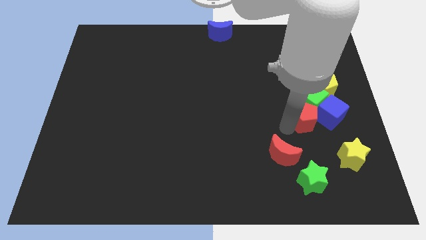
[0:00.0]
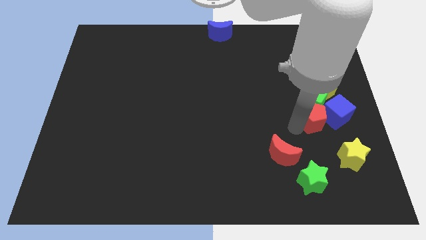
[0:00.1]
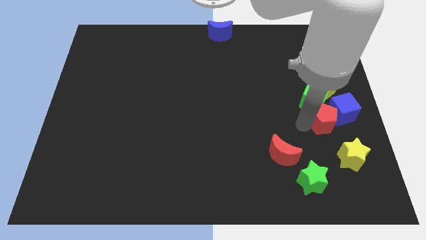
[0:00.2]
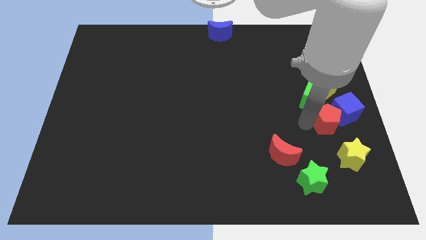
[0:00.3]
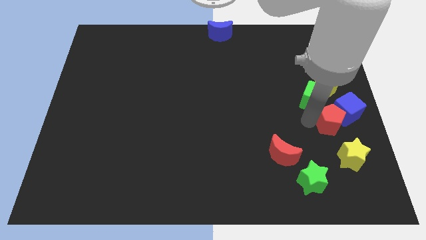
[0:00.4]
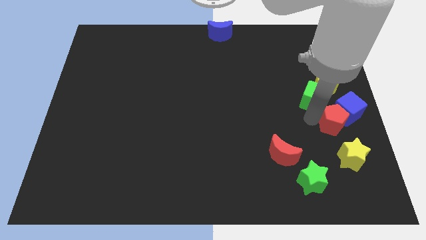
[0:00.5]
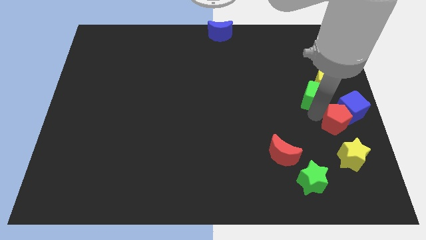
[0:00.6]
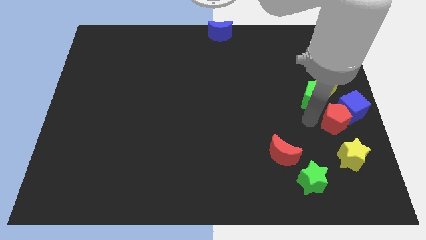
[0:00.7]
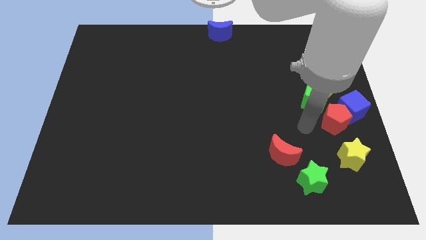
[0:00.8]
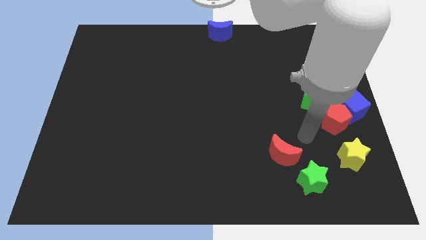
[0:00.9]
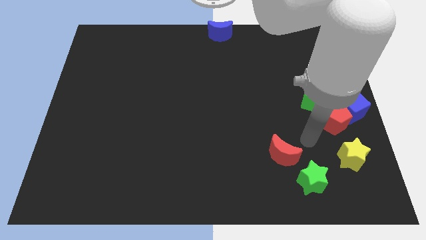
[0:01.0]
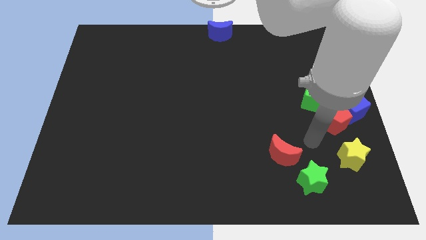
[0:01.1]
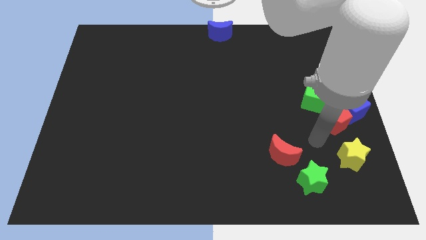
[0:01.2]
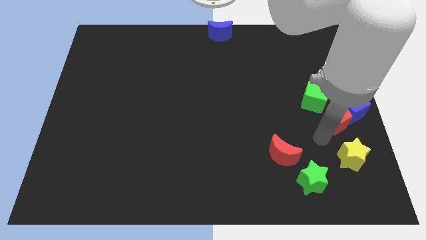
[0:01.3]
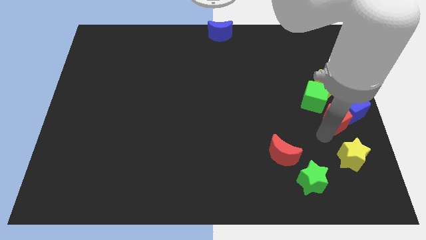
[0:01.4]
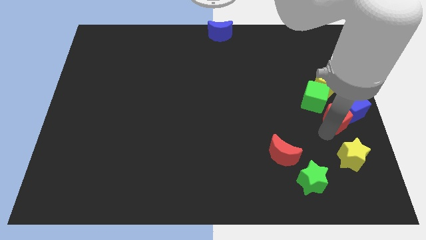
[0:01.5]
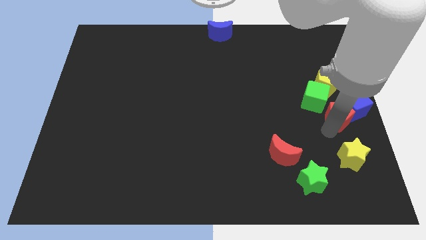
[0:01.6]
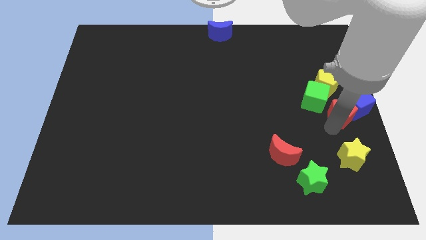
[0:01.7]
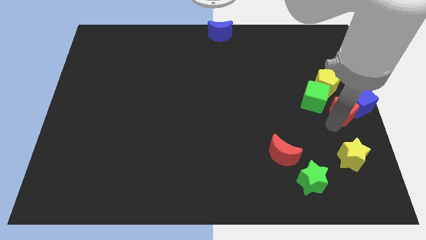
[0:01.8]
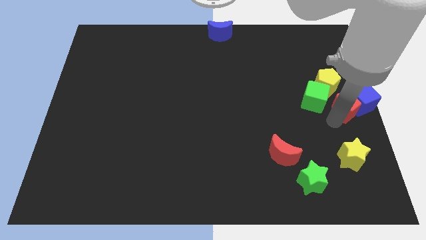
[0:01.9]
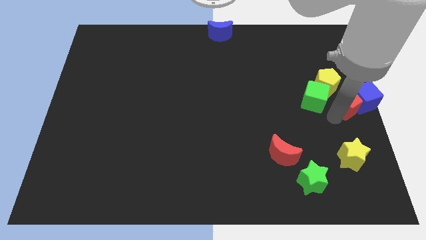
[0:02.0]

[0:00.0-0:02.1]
push red pentagon towards blue cube

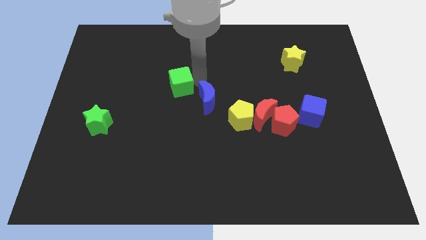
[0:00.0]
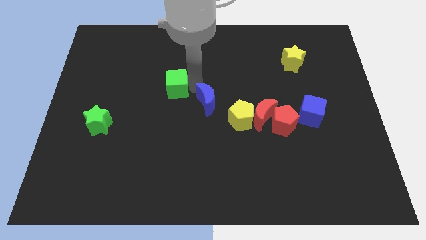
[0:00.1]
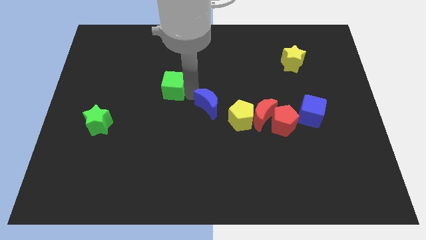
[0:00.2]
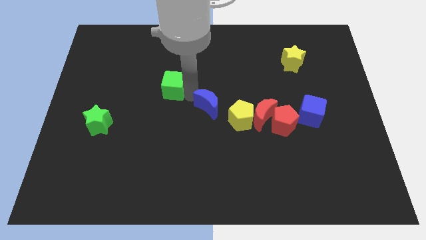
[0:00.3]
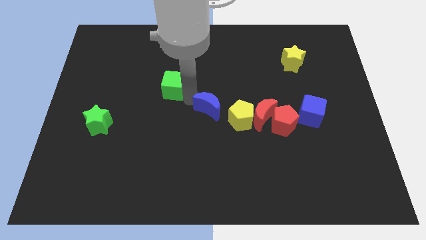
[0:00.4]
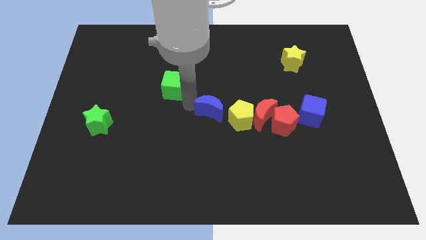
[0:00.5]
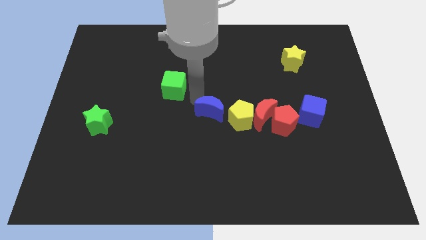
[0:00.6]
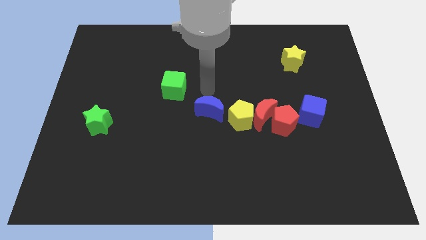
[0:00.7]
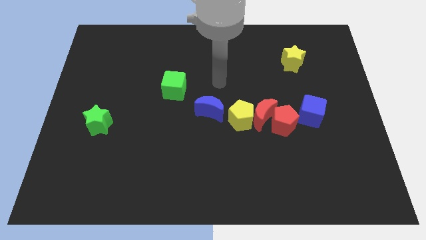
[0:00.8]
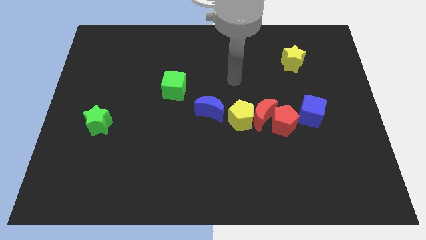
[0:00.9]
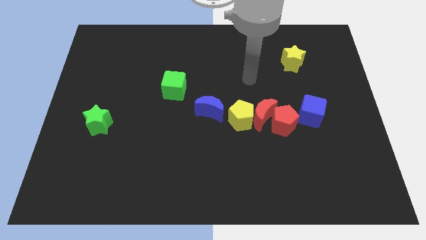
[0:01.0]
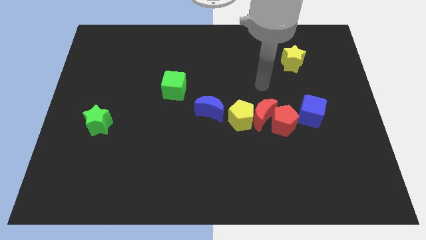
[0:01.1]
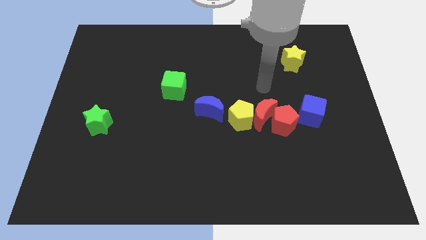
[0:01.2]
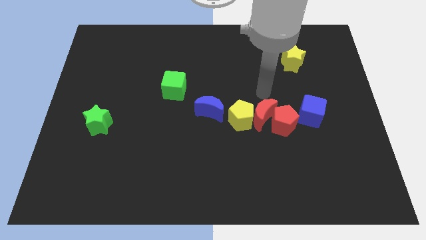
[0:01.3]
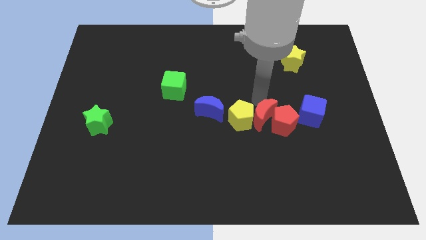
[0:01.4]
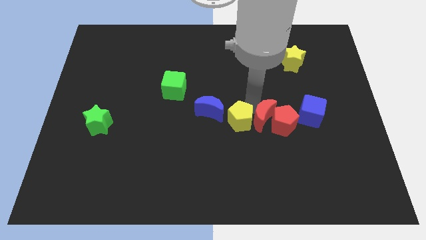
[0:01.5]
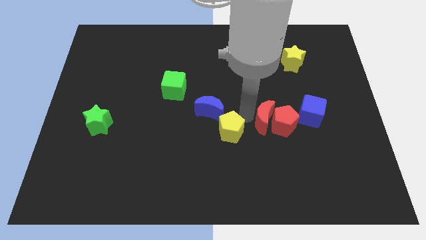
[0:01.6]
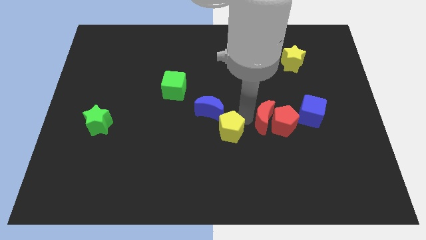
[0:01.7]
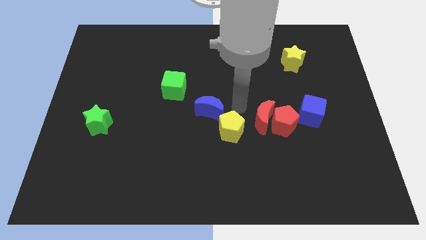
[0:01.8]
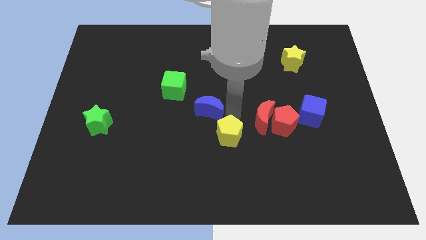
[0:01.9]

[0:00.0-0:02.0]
move the yellow pentagon downwards

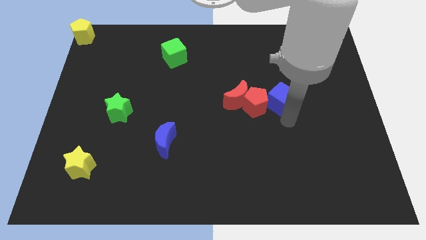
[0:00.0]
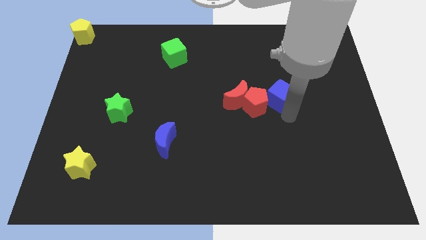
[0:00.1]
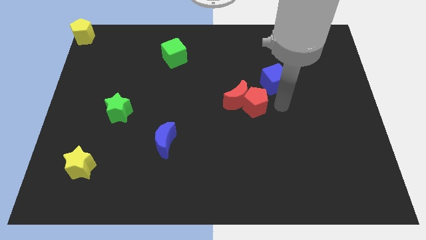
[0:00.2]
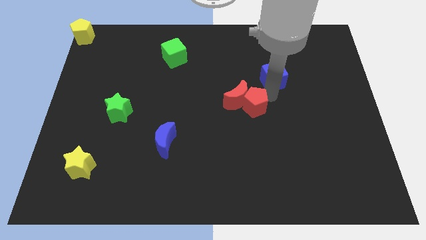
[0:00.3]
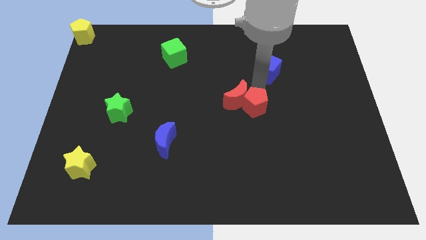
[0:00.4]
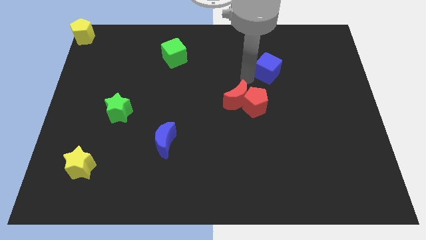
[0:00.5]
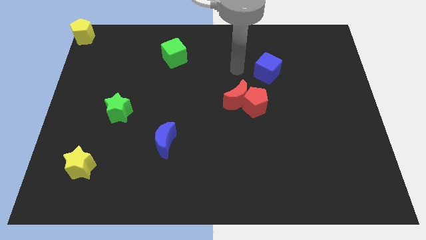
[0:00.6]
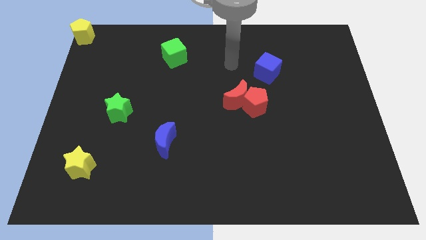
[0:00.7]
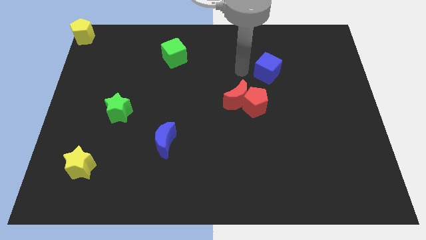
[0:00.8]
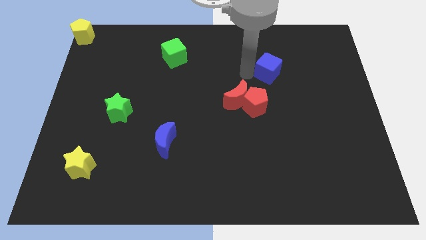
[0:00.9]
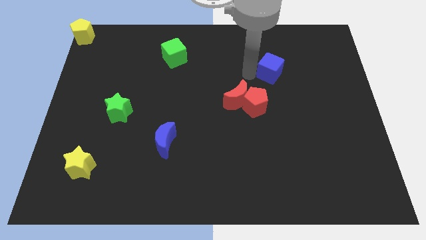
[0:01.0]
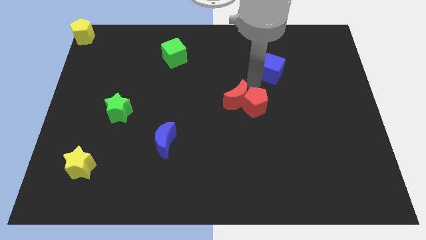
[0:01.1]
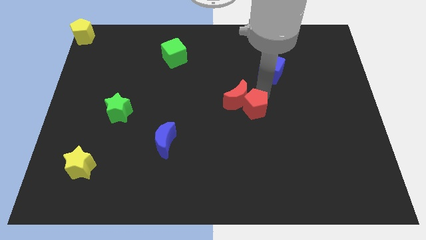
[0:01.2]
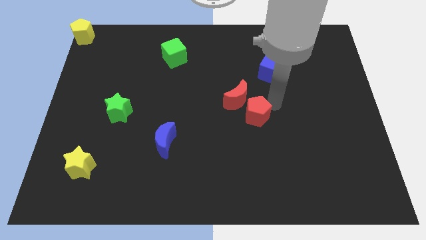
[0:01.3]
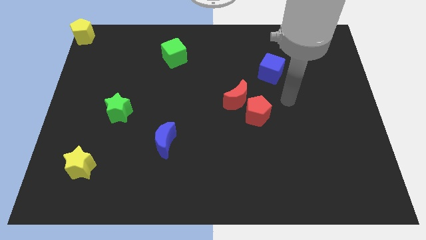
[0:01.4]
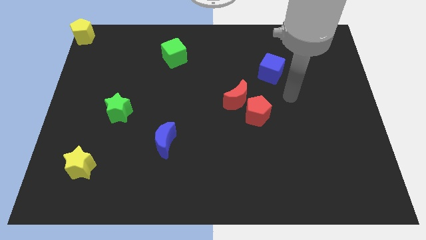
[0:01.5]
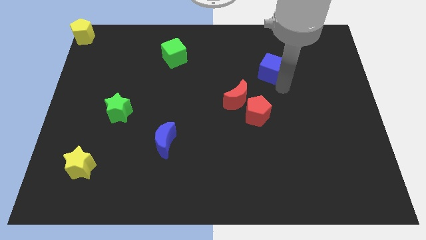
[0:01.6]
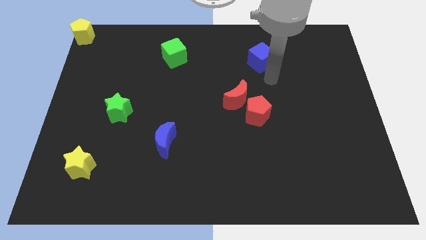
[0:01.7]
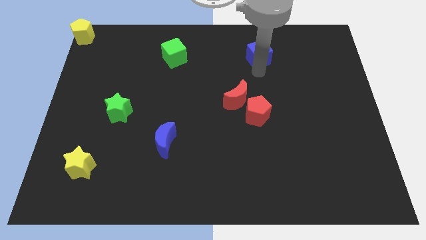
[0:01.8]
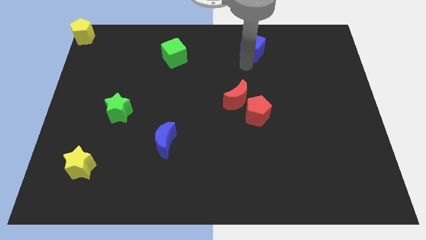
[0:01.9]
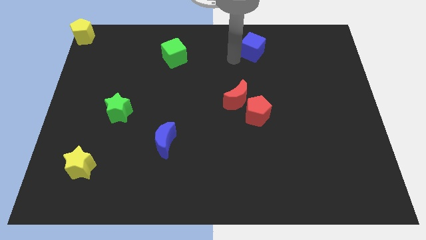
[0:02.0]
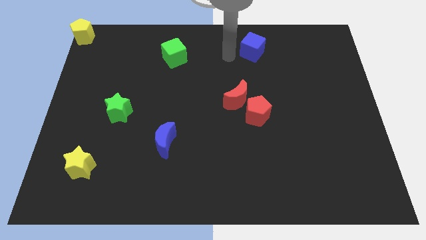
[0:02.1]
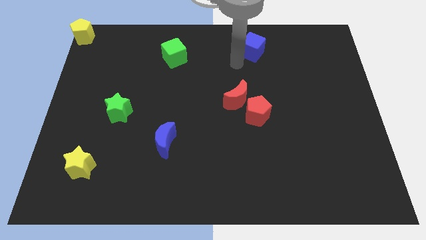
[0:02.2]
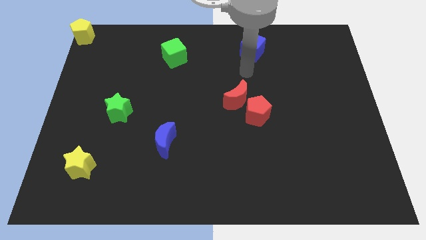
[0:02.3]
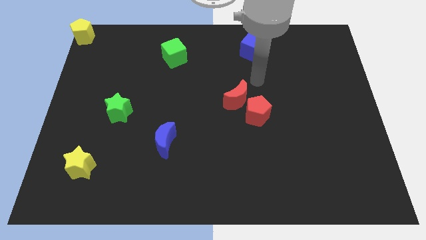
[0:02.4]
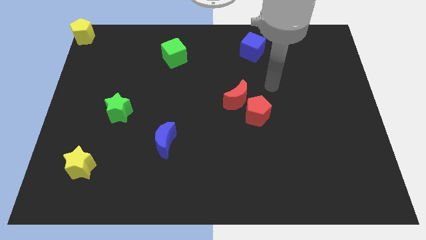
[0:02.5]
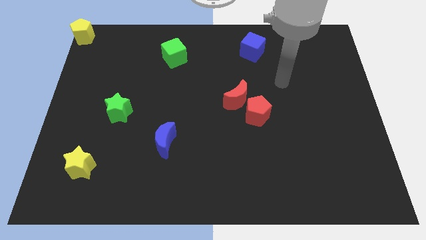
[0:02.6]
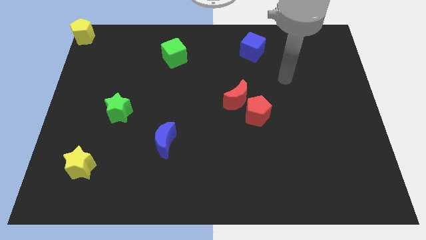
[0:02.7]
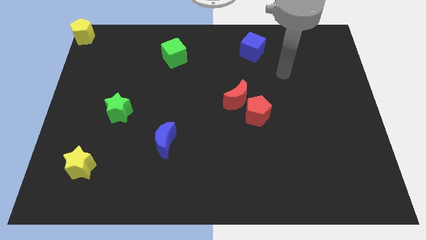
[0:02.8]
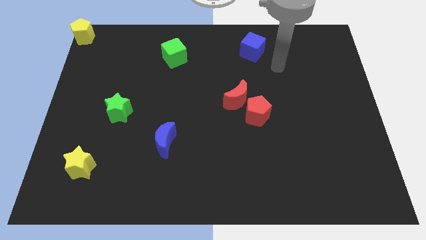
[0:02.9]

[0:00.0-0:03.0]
push blue cube away from the red pentagon

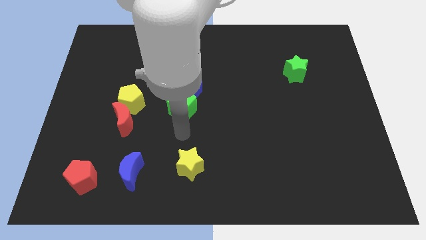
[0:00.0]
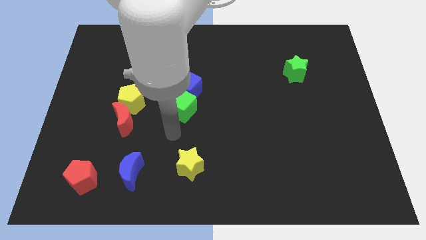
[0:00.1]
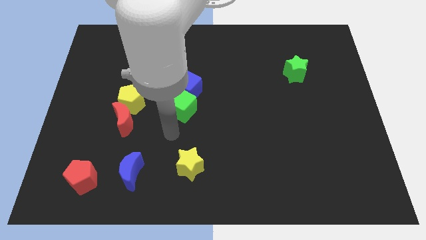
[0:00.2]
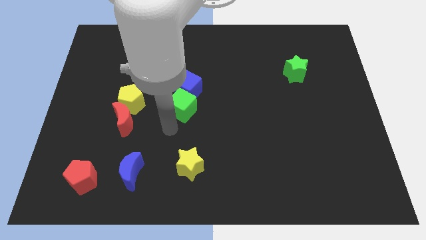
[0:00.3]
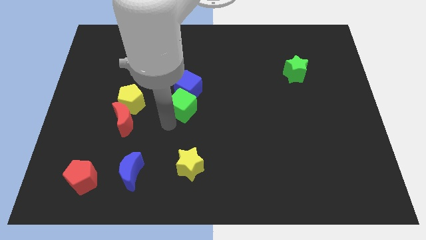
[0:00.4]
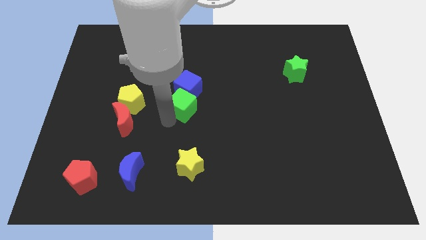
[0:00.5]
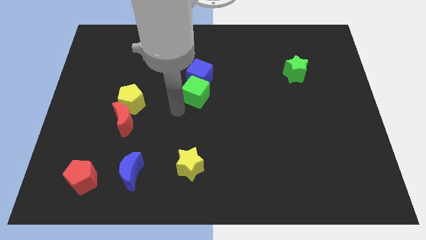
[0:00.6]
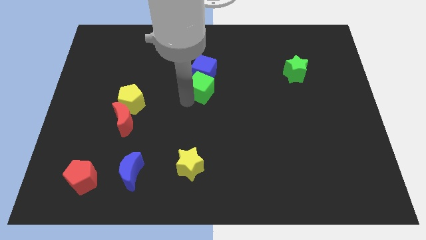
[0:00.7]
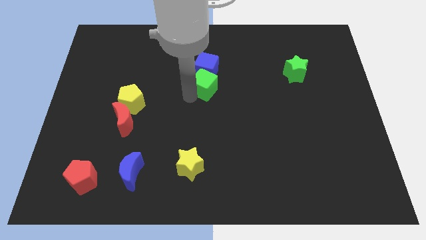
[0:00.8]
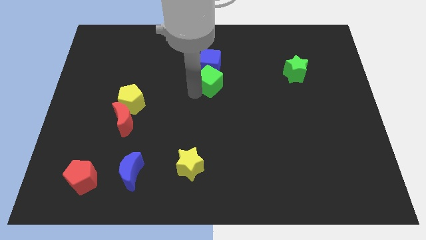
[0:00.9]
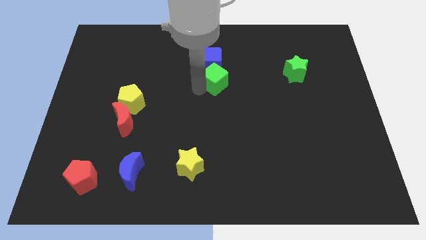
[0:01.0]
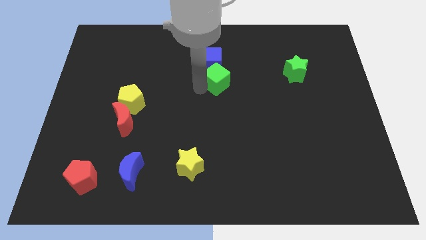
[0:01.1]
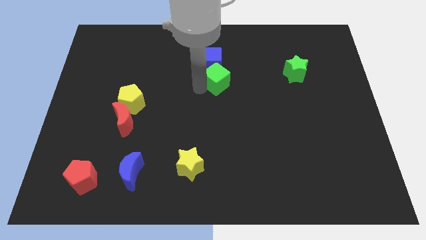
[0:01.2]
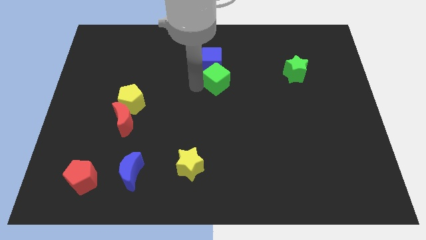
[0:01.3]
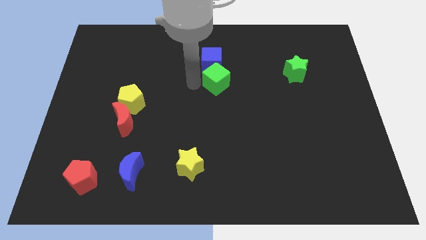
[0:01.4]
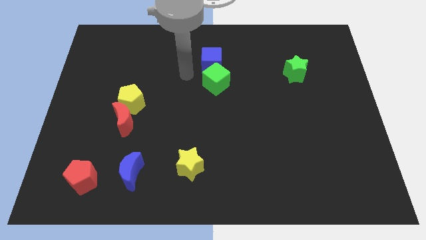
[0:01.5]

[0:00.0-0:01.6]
push the green and blue cubes to the top center

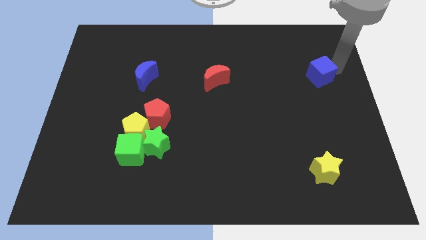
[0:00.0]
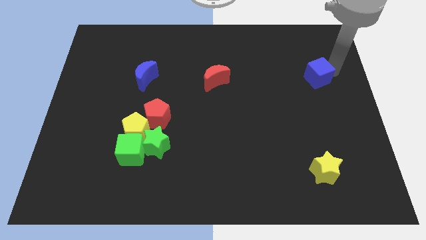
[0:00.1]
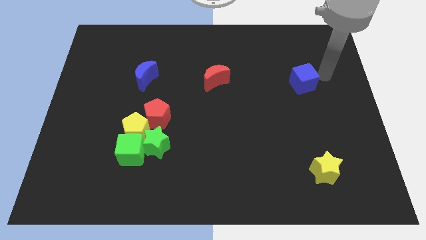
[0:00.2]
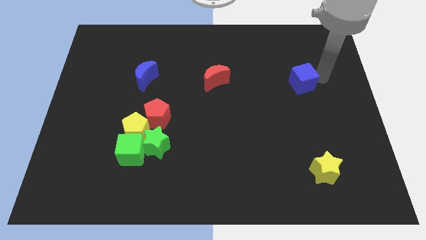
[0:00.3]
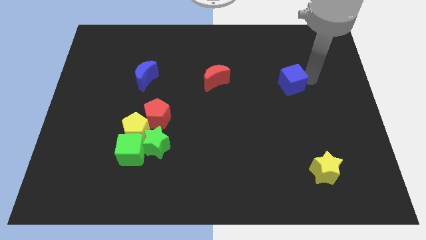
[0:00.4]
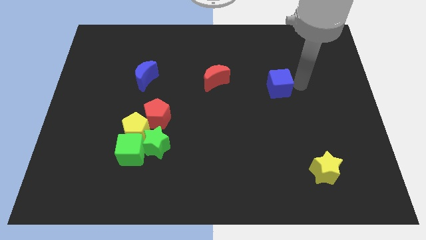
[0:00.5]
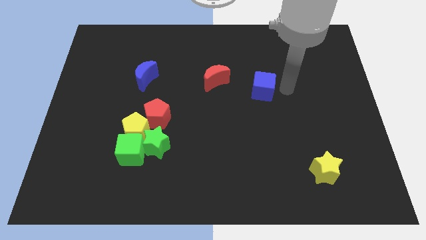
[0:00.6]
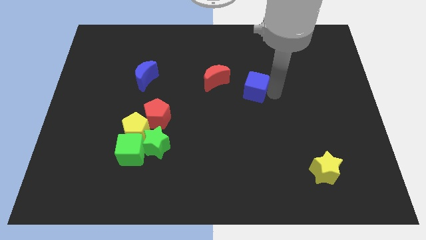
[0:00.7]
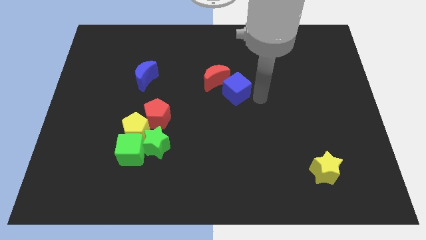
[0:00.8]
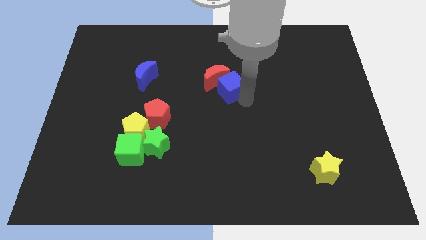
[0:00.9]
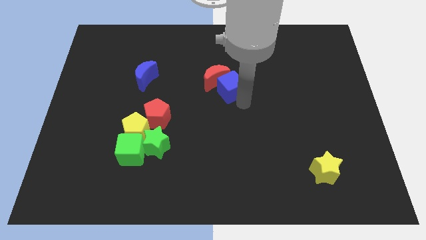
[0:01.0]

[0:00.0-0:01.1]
push the blue cube into the red crescent
